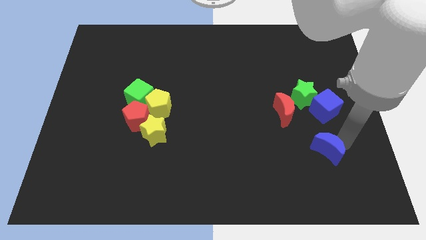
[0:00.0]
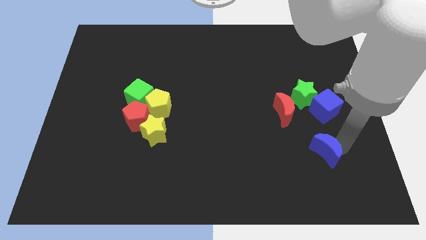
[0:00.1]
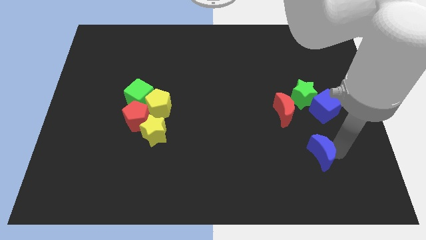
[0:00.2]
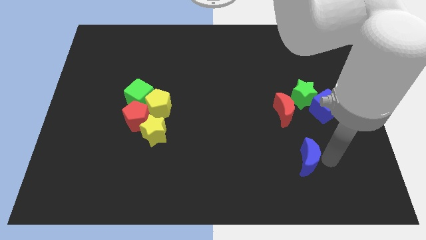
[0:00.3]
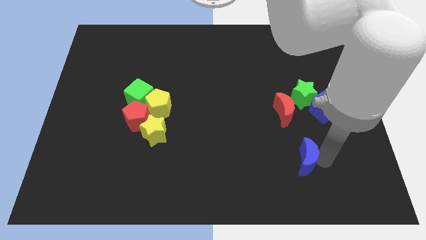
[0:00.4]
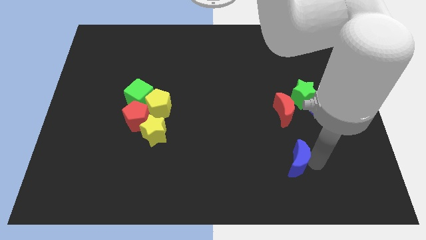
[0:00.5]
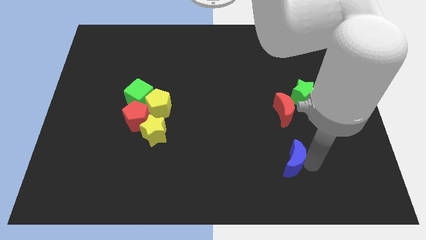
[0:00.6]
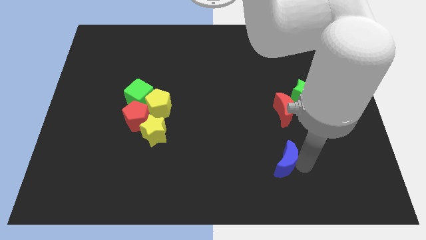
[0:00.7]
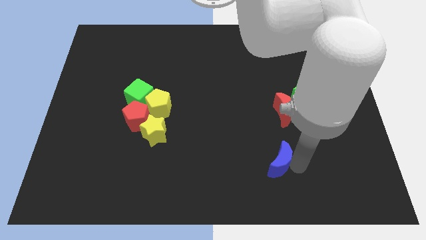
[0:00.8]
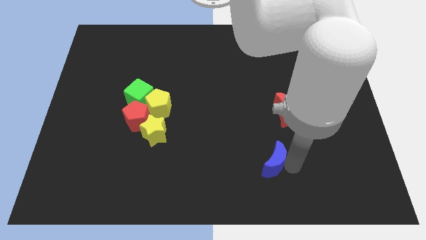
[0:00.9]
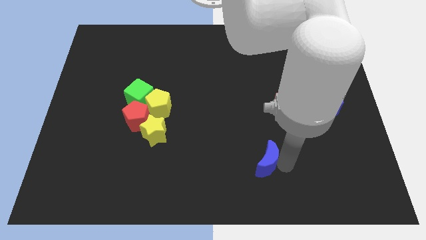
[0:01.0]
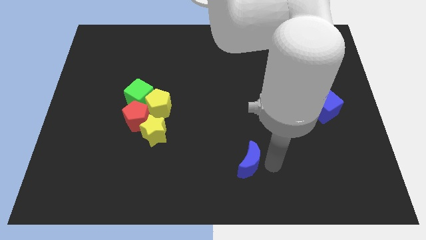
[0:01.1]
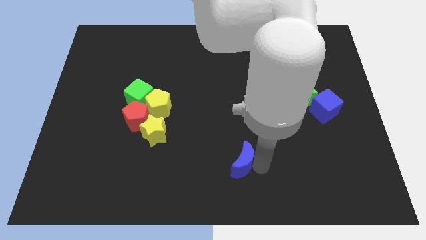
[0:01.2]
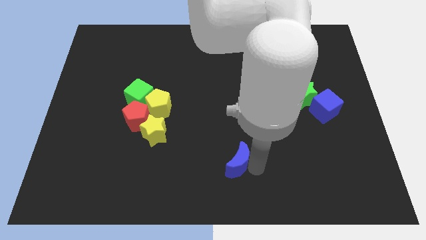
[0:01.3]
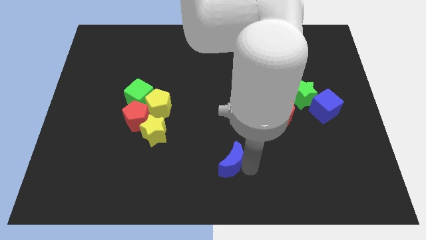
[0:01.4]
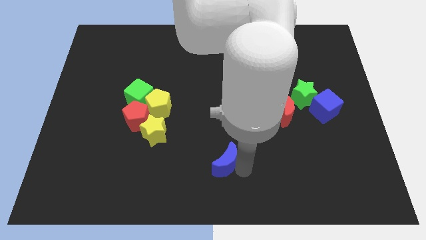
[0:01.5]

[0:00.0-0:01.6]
move the blue crescent to the left side of the board

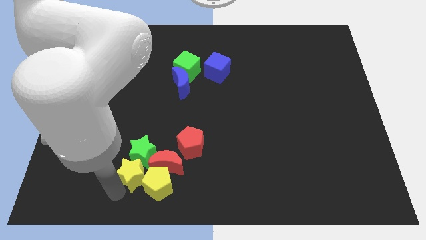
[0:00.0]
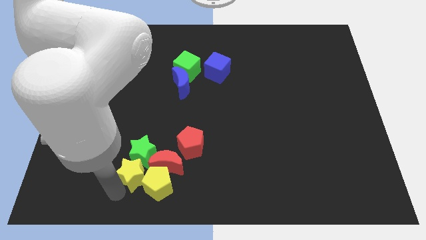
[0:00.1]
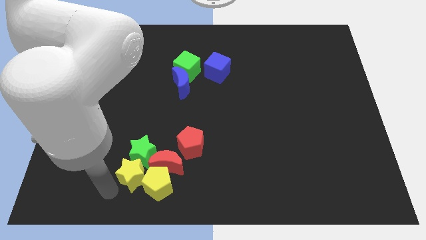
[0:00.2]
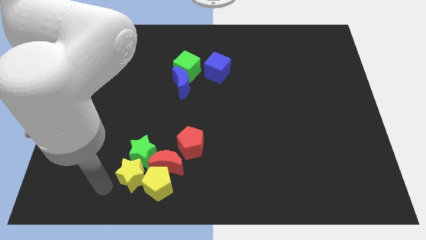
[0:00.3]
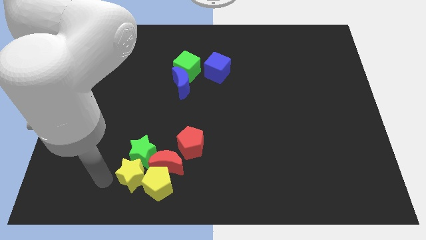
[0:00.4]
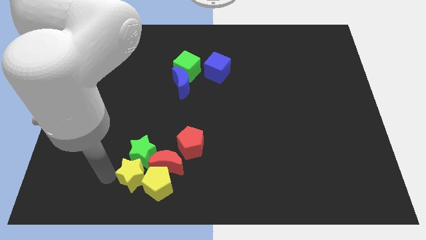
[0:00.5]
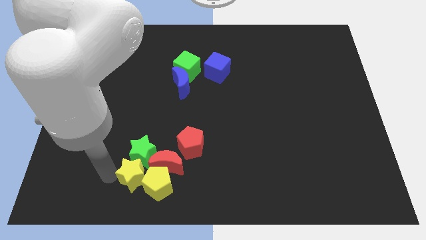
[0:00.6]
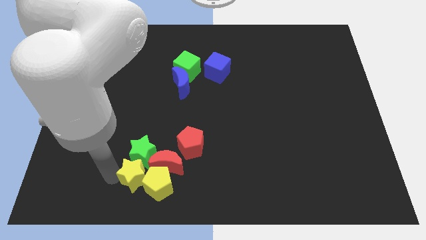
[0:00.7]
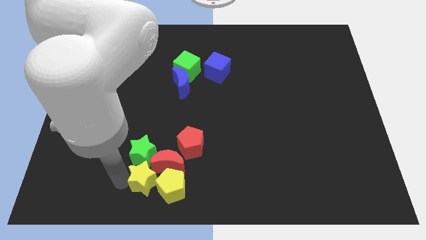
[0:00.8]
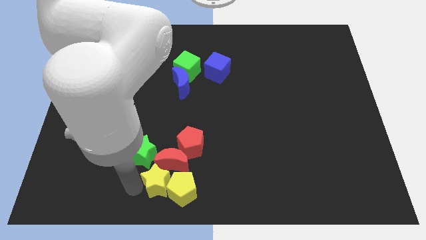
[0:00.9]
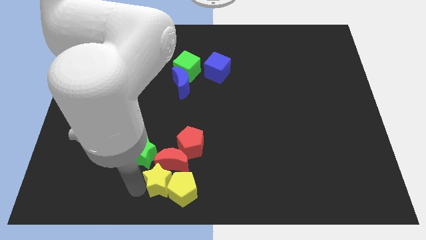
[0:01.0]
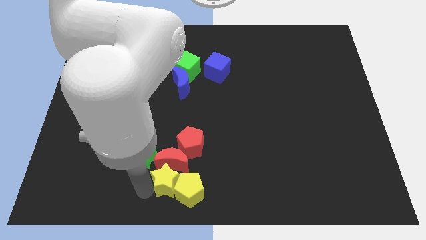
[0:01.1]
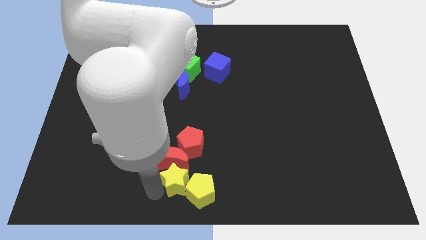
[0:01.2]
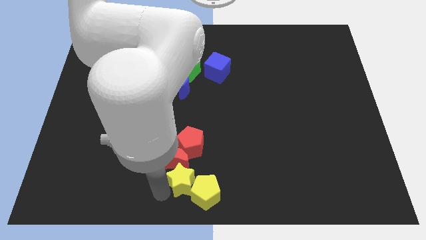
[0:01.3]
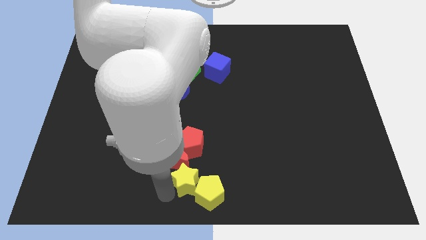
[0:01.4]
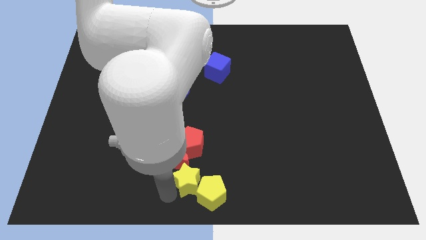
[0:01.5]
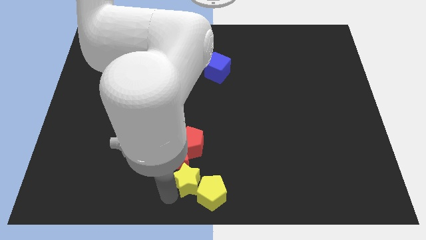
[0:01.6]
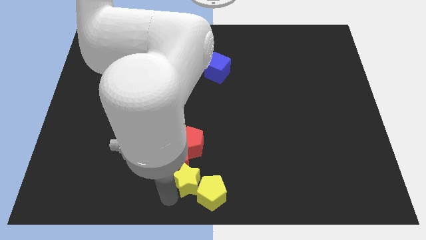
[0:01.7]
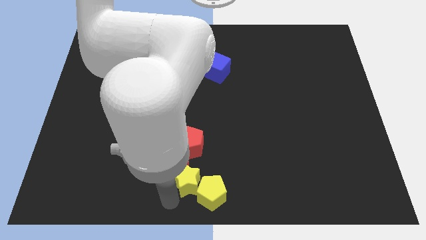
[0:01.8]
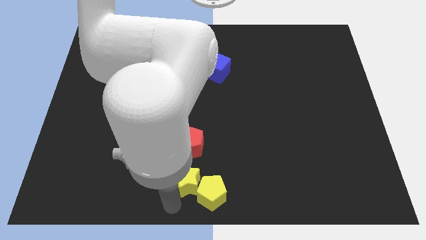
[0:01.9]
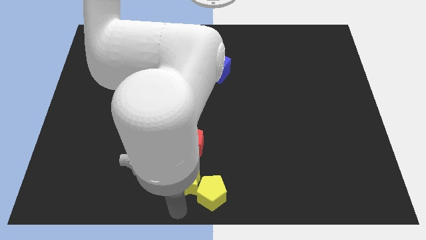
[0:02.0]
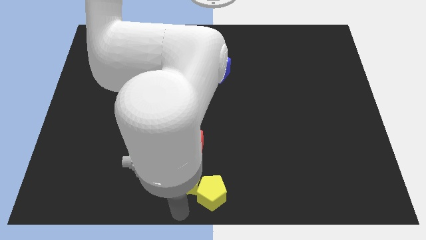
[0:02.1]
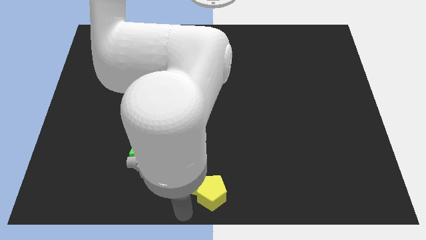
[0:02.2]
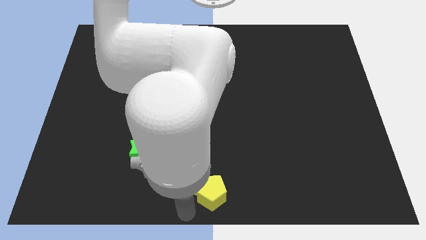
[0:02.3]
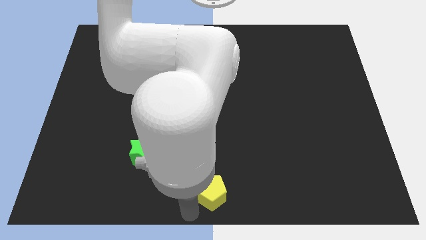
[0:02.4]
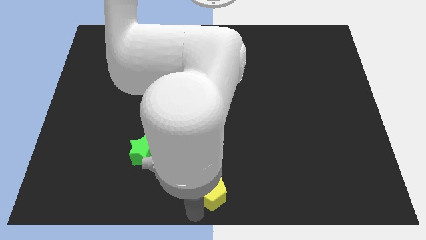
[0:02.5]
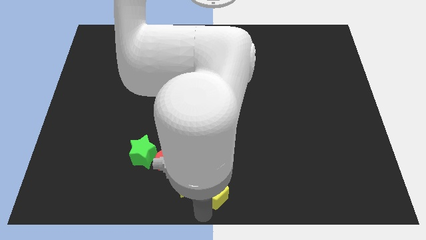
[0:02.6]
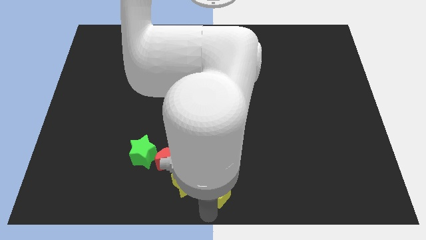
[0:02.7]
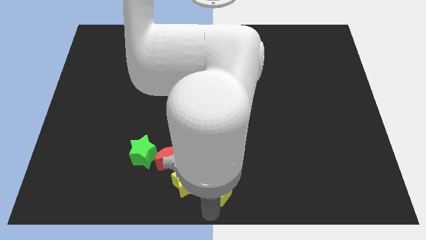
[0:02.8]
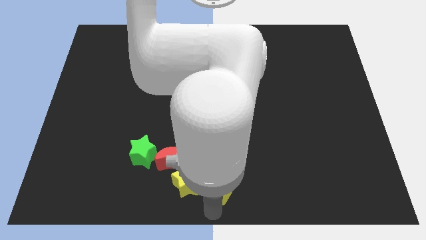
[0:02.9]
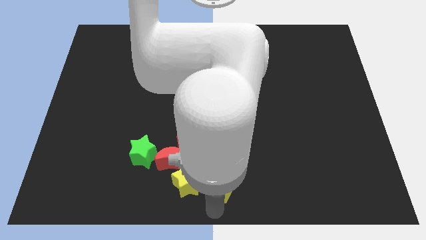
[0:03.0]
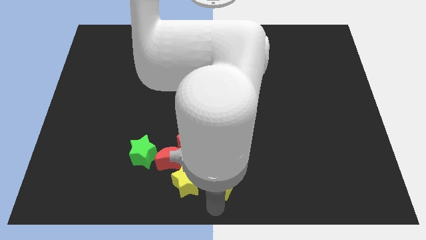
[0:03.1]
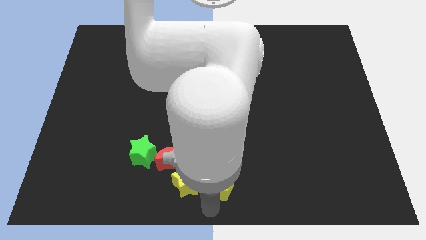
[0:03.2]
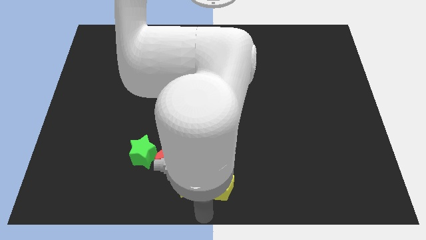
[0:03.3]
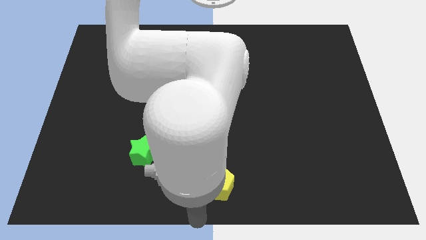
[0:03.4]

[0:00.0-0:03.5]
slide the yellow blocks to the bottom center

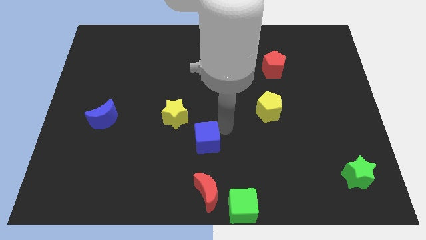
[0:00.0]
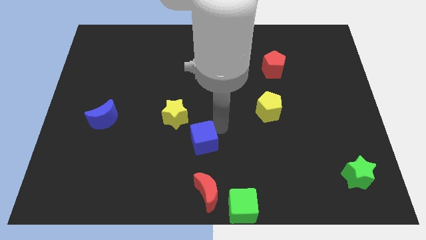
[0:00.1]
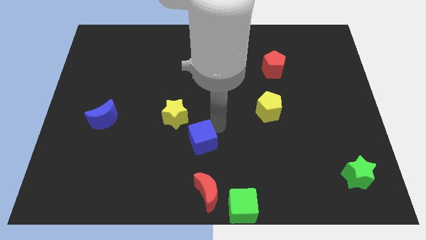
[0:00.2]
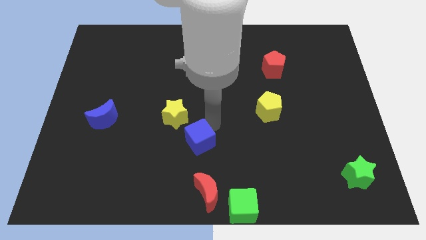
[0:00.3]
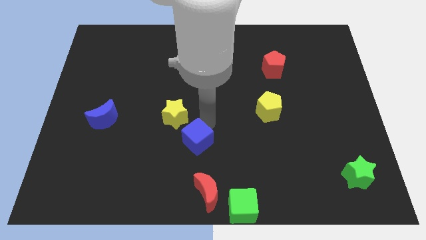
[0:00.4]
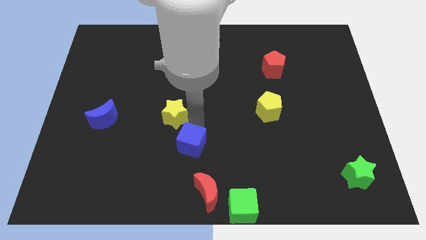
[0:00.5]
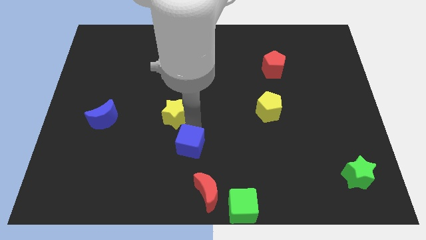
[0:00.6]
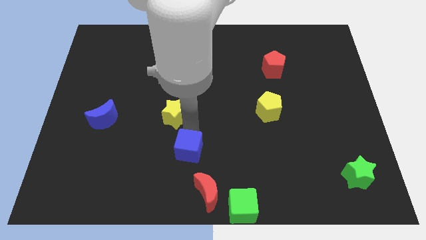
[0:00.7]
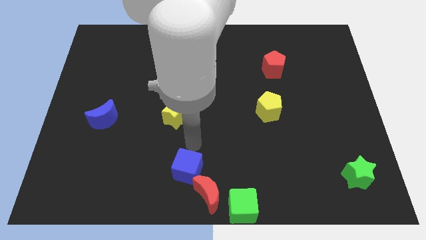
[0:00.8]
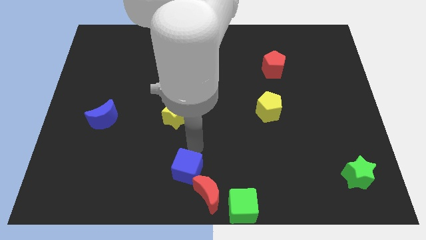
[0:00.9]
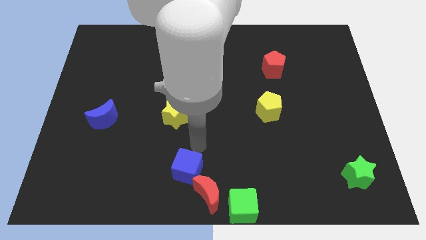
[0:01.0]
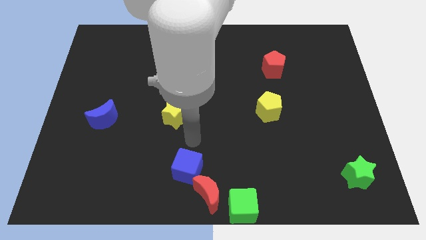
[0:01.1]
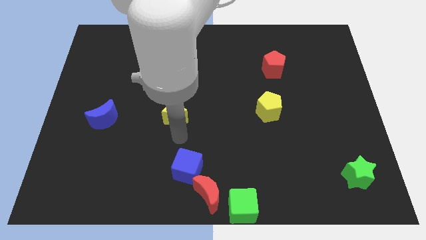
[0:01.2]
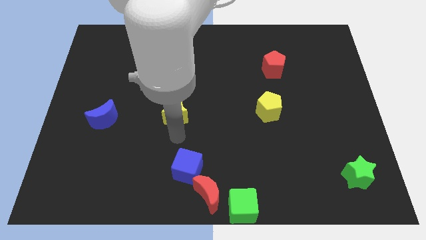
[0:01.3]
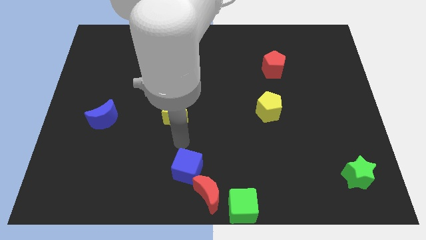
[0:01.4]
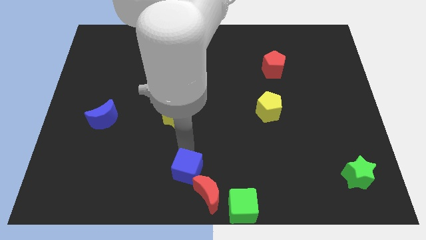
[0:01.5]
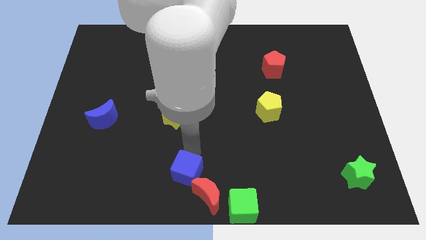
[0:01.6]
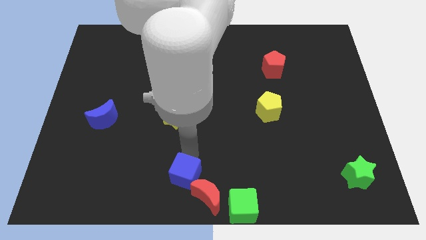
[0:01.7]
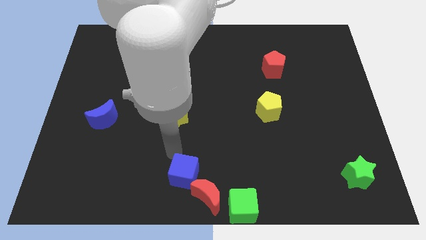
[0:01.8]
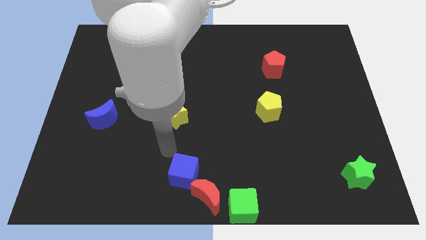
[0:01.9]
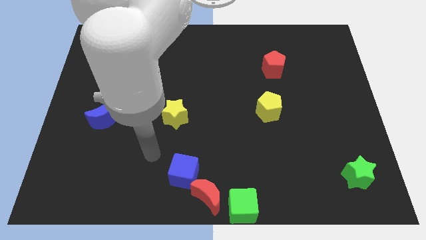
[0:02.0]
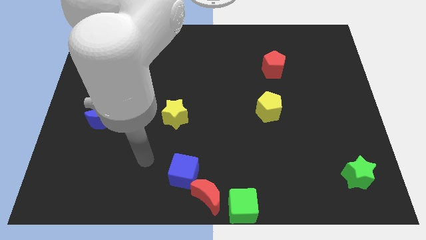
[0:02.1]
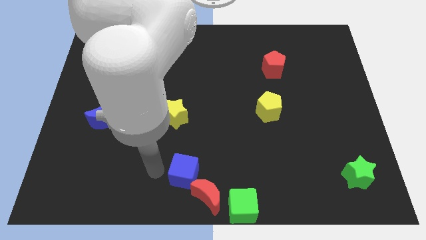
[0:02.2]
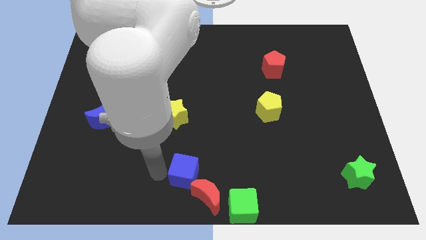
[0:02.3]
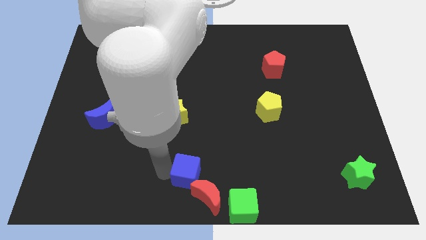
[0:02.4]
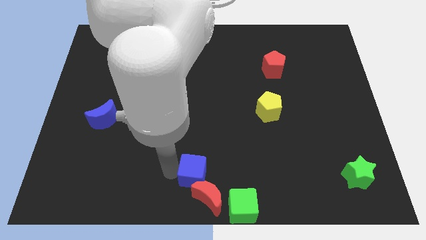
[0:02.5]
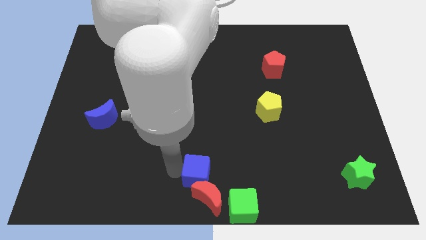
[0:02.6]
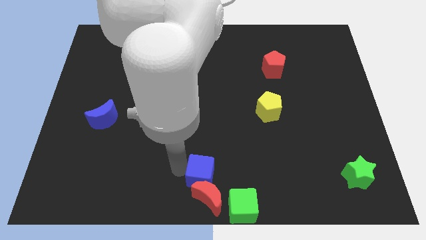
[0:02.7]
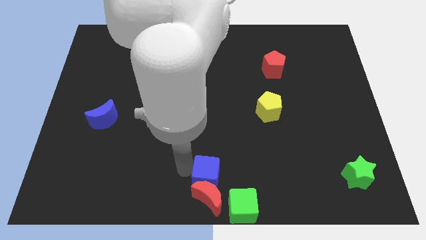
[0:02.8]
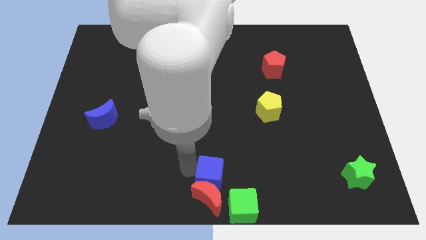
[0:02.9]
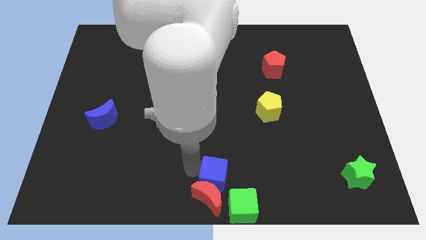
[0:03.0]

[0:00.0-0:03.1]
place the blue cube to the top of the red crescent

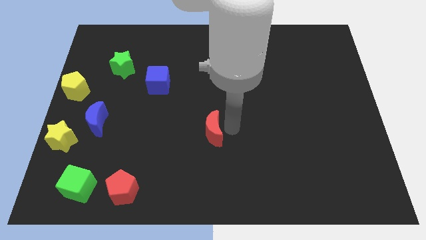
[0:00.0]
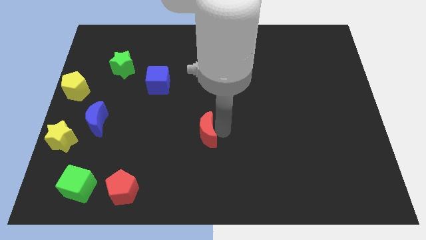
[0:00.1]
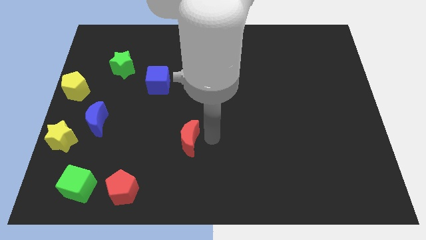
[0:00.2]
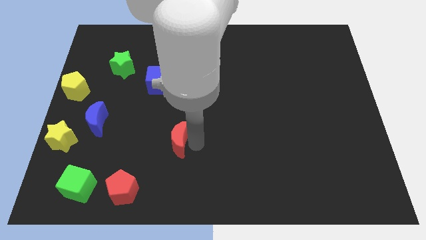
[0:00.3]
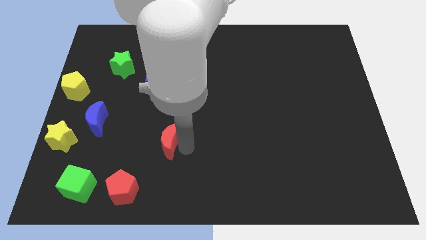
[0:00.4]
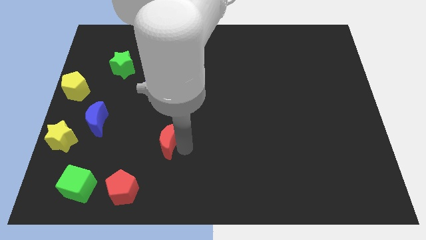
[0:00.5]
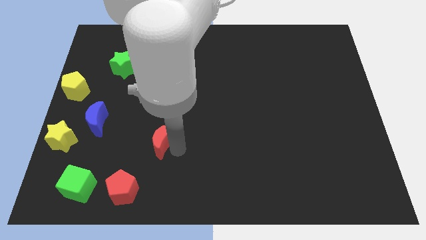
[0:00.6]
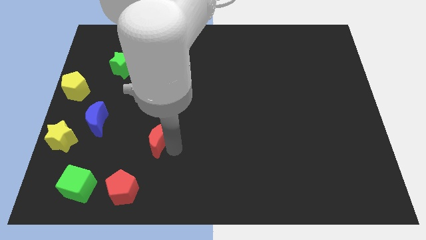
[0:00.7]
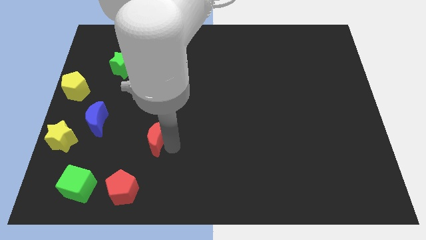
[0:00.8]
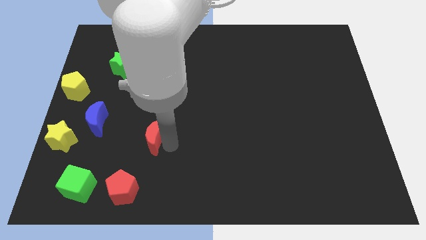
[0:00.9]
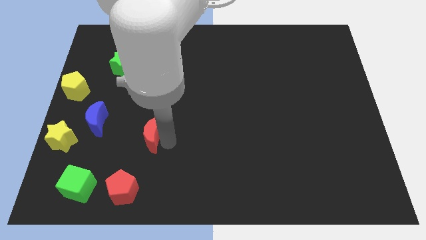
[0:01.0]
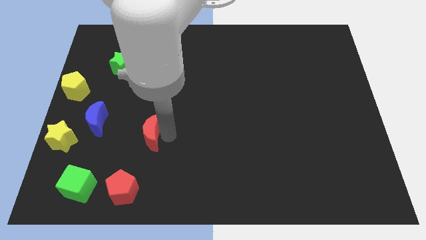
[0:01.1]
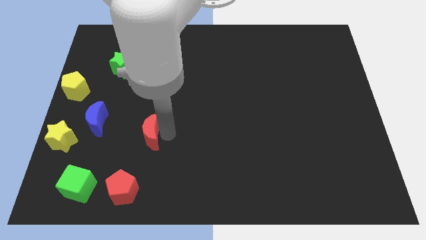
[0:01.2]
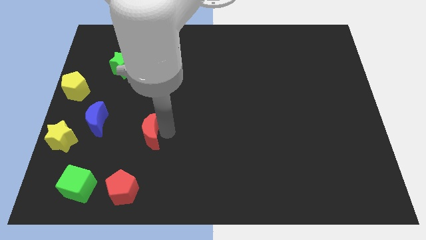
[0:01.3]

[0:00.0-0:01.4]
slide the red moon to left of the board
